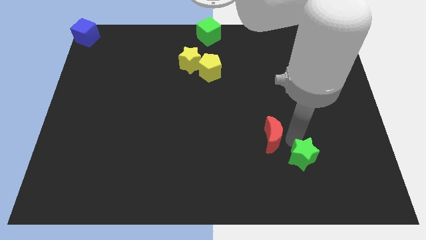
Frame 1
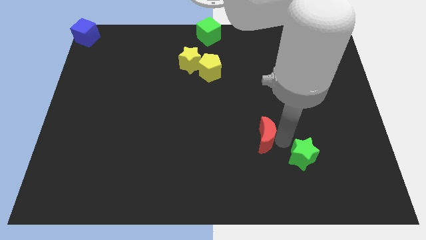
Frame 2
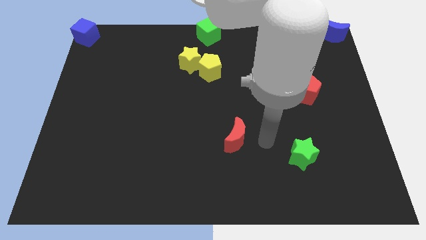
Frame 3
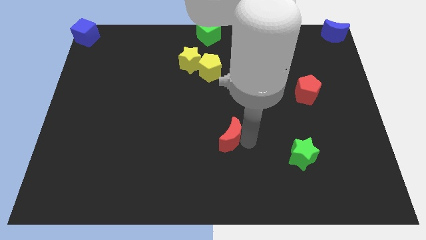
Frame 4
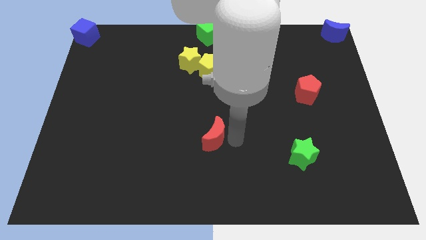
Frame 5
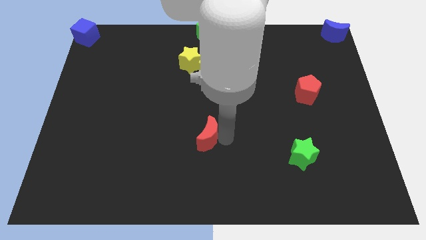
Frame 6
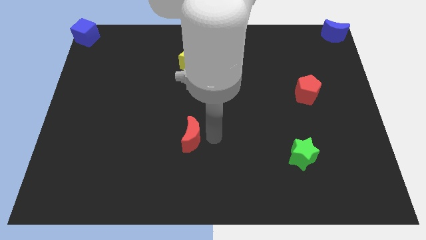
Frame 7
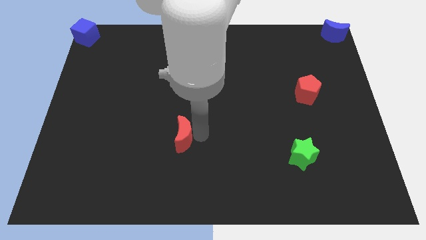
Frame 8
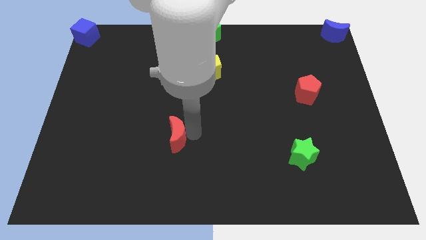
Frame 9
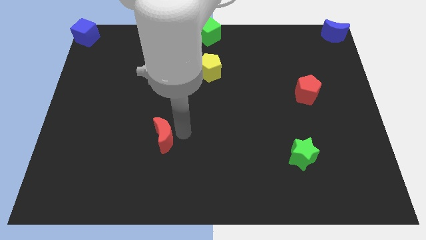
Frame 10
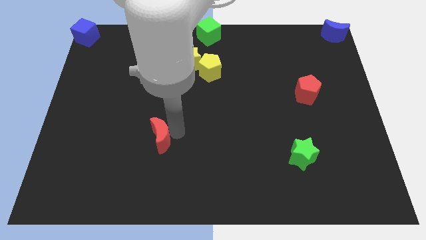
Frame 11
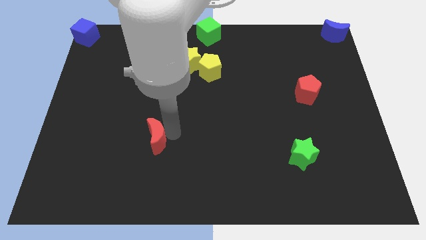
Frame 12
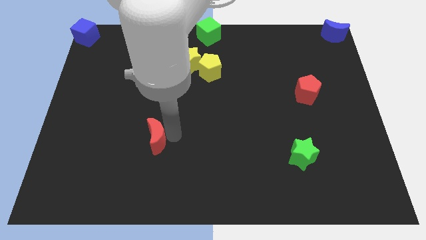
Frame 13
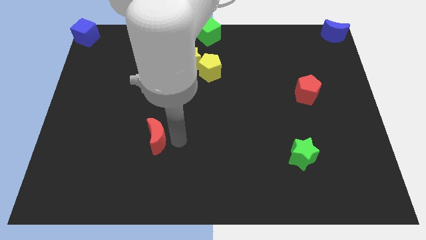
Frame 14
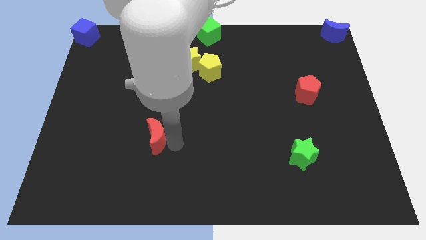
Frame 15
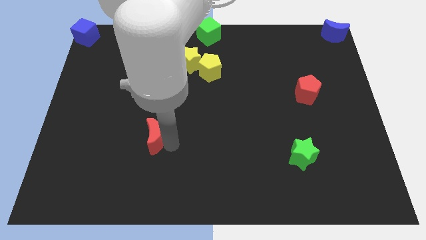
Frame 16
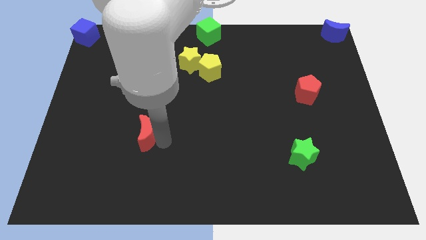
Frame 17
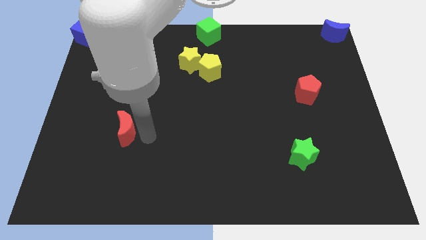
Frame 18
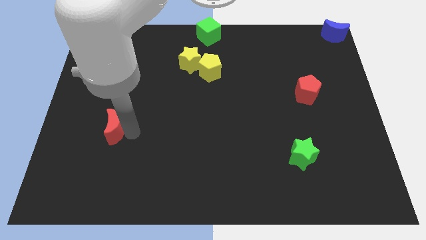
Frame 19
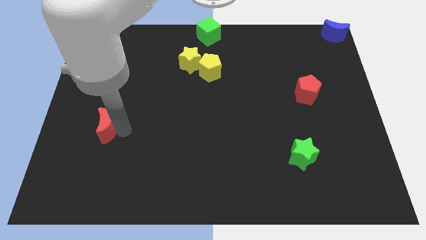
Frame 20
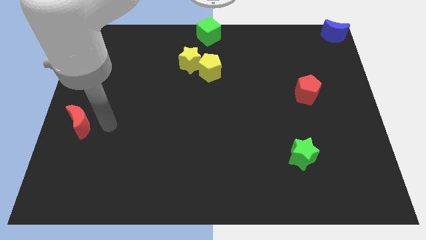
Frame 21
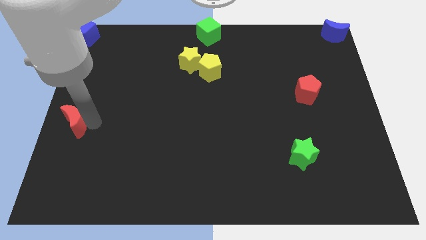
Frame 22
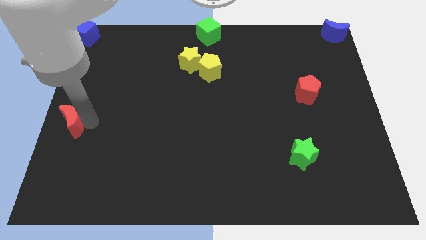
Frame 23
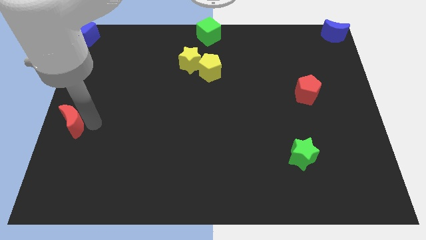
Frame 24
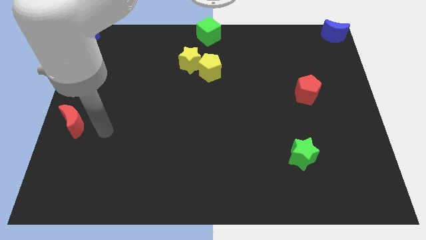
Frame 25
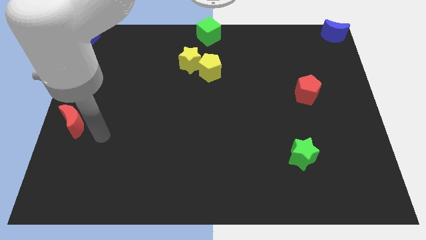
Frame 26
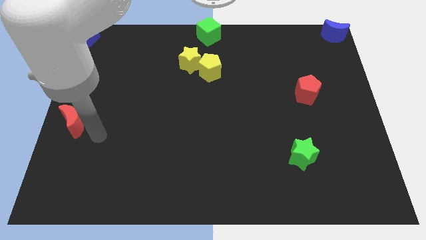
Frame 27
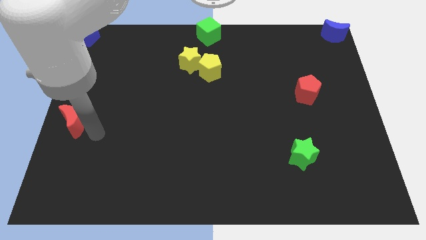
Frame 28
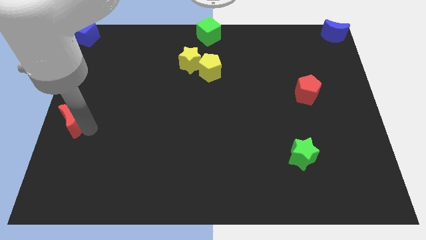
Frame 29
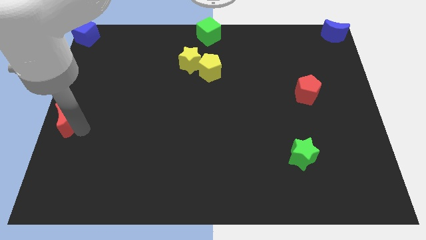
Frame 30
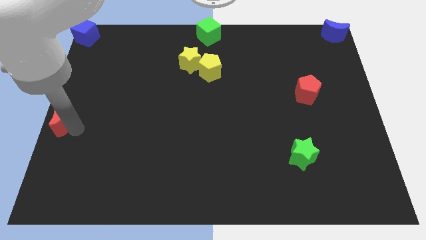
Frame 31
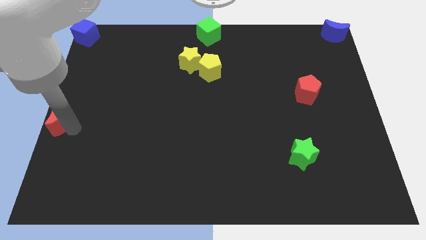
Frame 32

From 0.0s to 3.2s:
move the red crescent towards the left center of the board

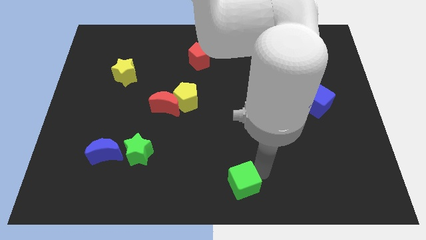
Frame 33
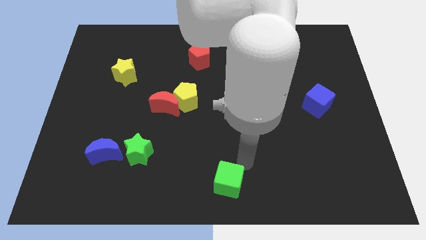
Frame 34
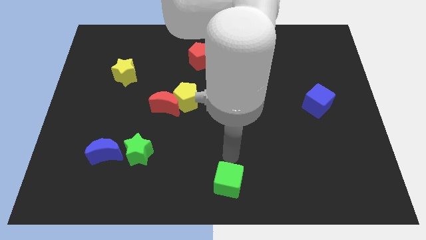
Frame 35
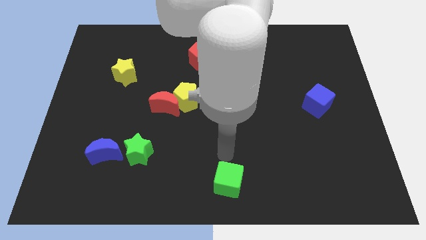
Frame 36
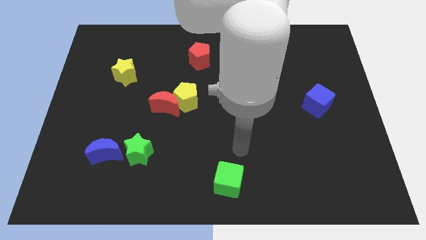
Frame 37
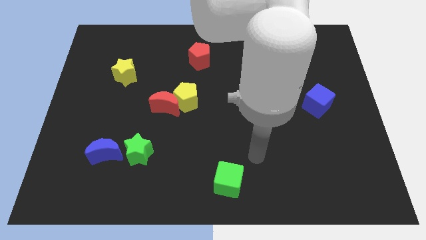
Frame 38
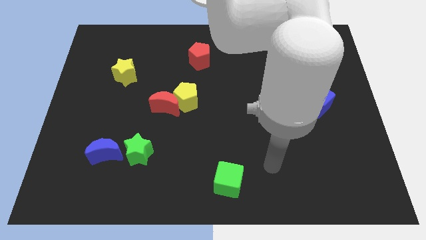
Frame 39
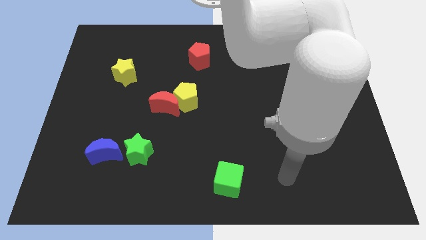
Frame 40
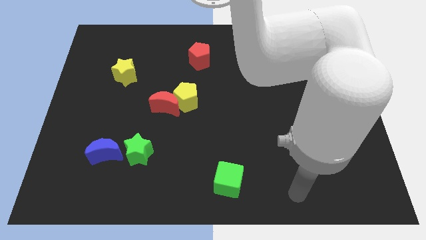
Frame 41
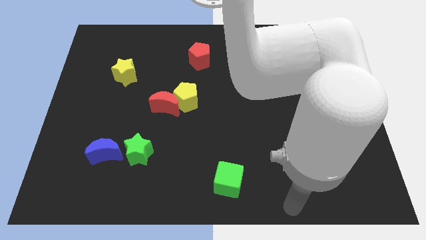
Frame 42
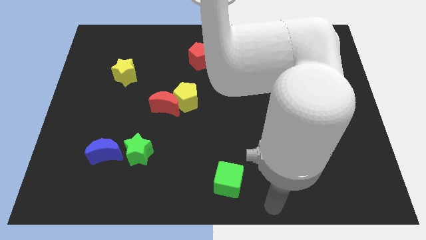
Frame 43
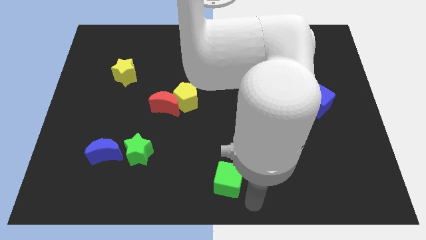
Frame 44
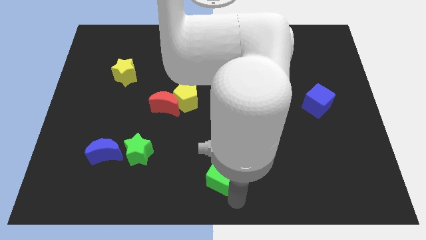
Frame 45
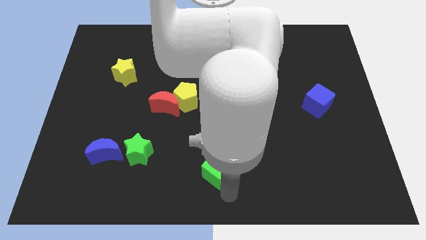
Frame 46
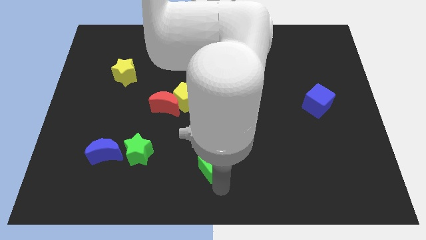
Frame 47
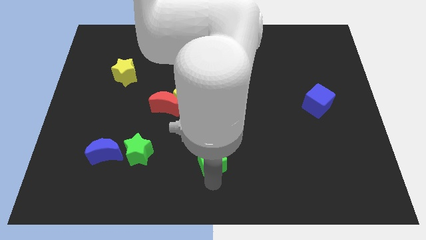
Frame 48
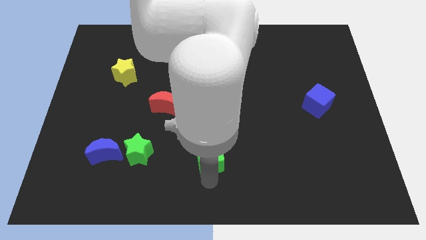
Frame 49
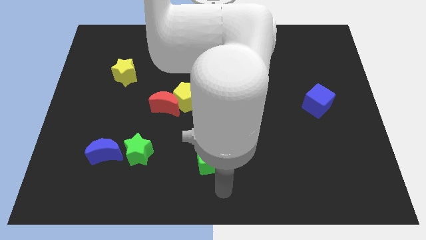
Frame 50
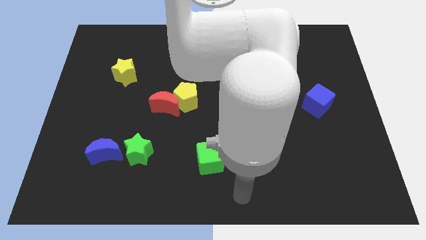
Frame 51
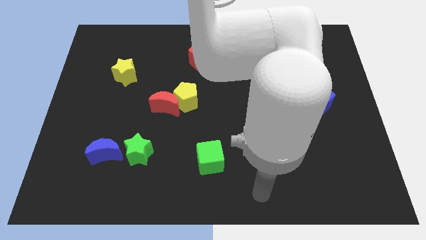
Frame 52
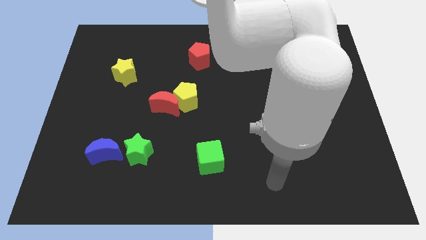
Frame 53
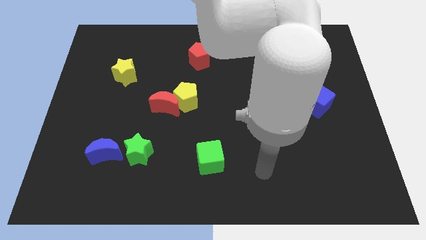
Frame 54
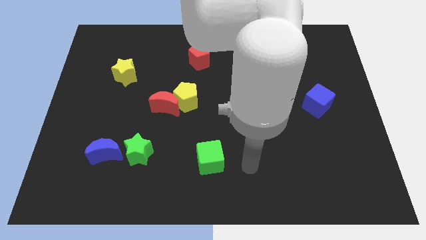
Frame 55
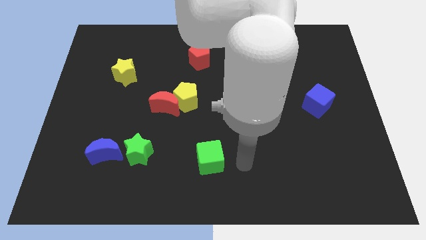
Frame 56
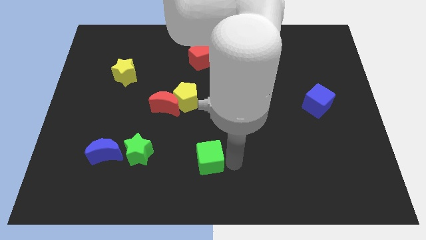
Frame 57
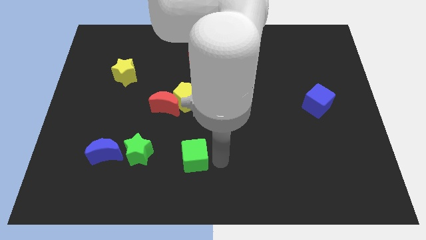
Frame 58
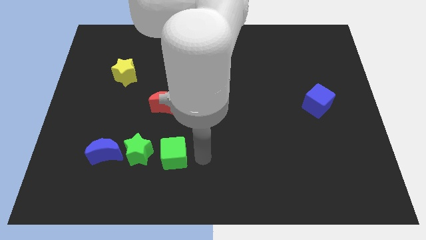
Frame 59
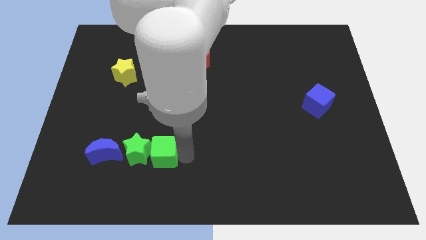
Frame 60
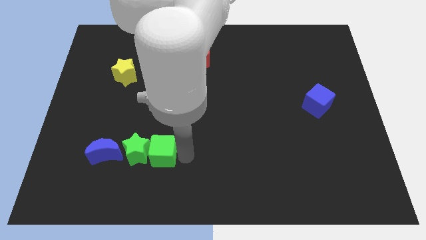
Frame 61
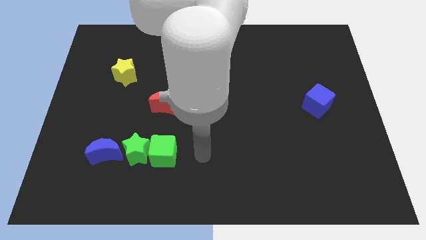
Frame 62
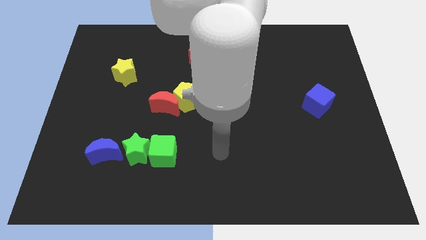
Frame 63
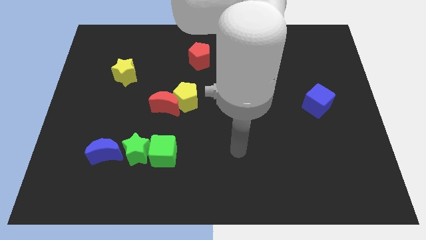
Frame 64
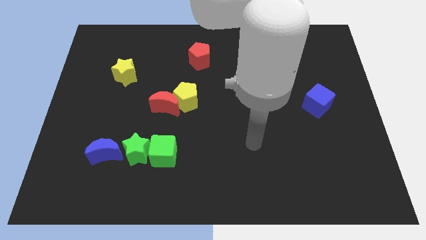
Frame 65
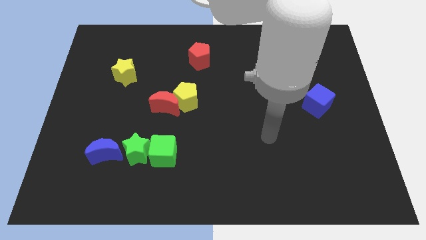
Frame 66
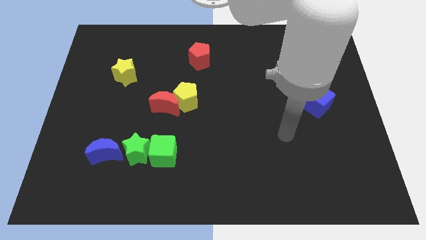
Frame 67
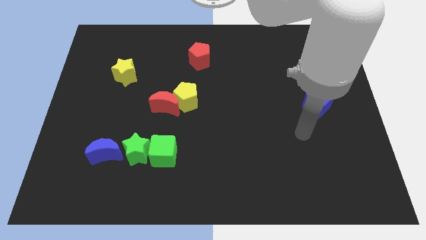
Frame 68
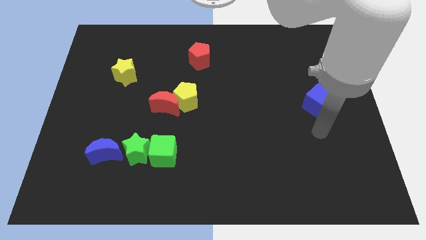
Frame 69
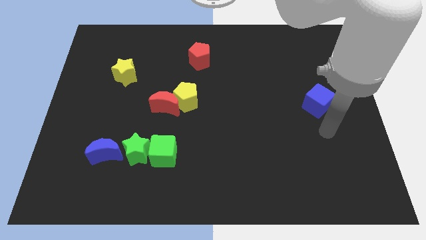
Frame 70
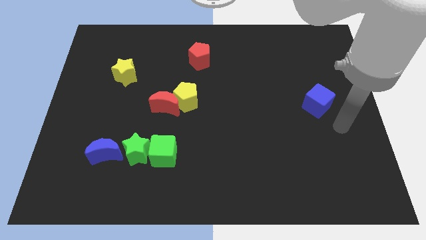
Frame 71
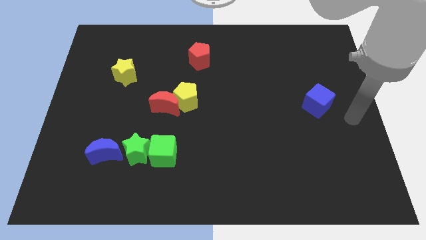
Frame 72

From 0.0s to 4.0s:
push the green cube into the green star towards the bottom left of the board

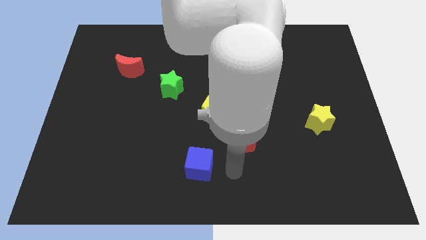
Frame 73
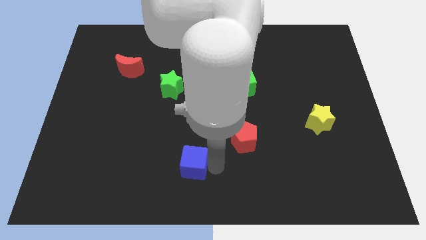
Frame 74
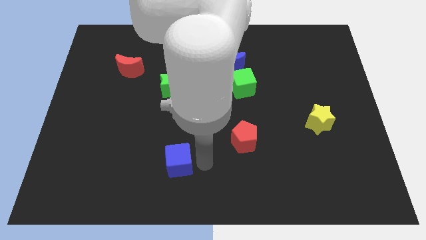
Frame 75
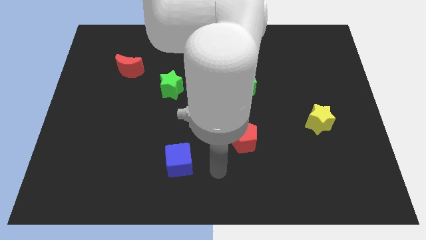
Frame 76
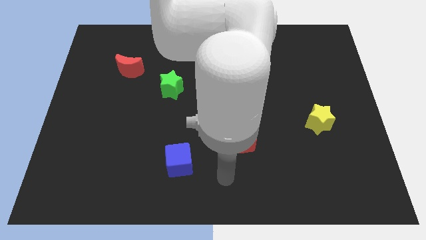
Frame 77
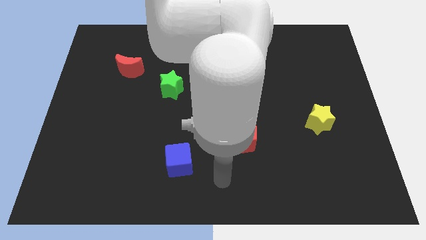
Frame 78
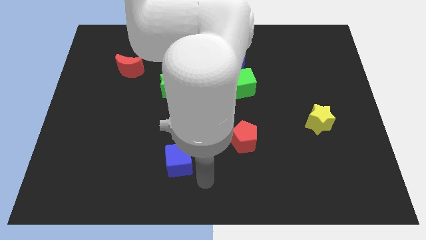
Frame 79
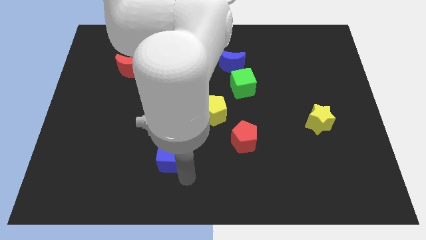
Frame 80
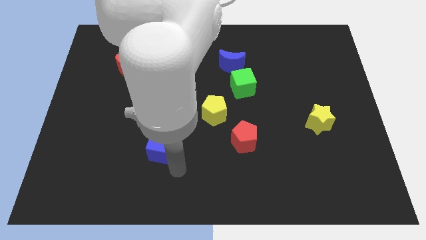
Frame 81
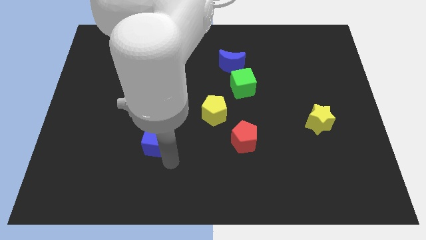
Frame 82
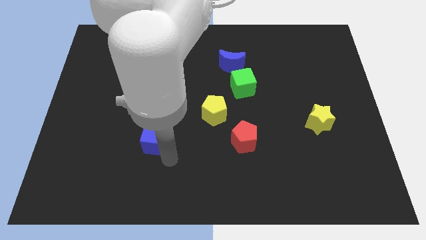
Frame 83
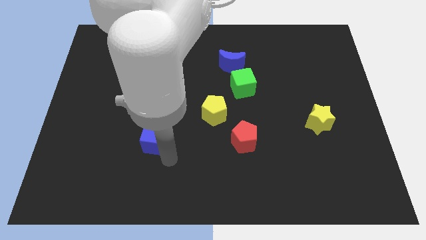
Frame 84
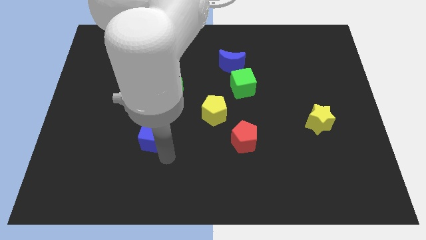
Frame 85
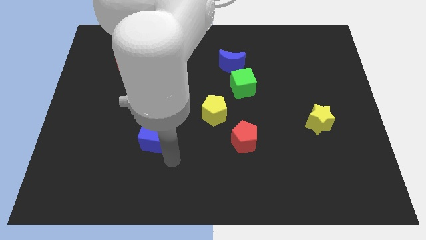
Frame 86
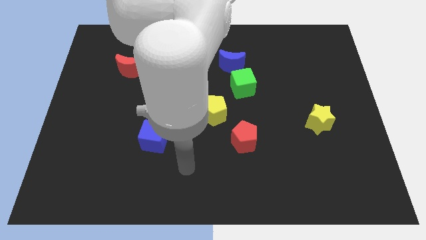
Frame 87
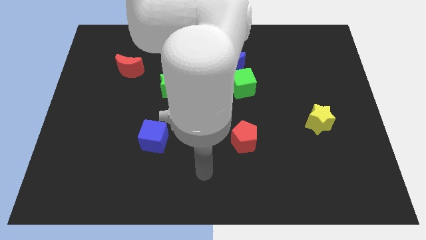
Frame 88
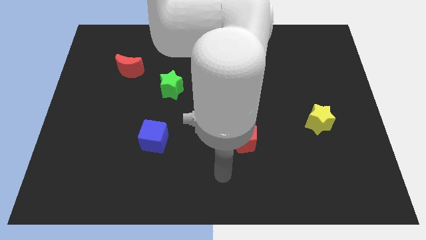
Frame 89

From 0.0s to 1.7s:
push the blue cube horizontally to the left side of the red pentagon

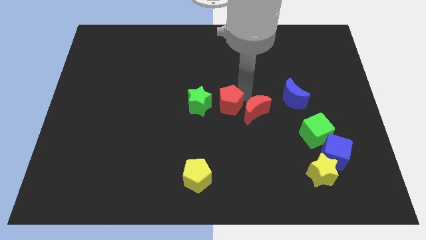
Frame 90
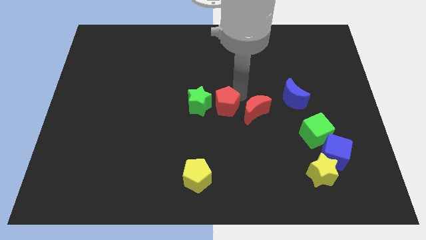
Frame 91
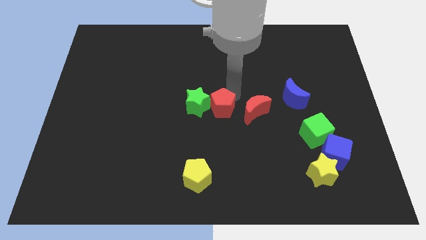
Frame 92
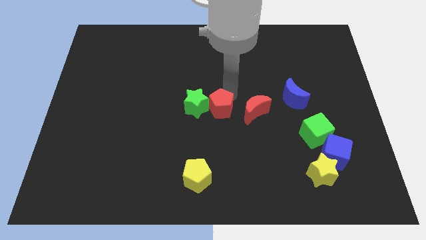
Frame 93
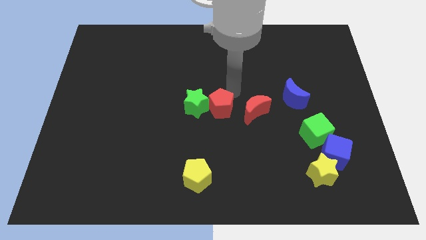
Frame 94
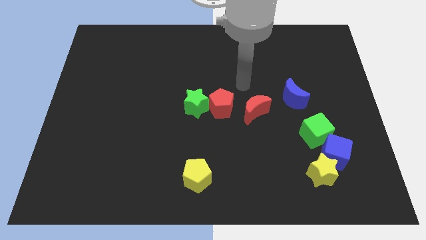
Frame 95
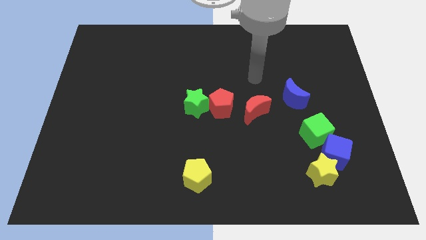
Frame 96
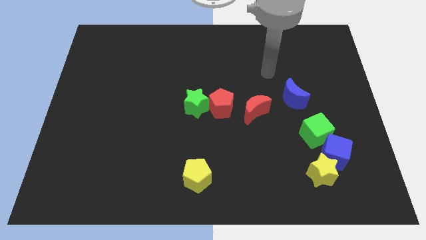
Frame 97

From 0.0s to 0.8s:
push the red pentagon into the green star
